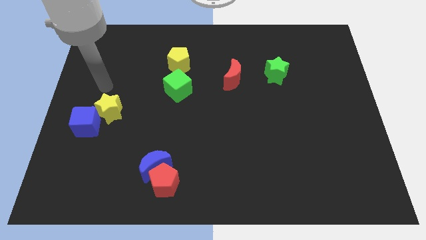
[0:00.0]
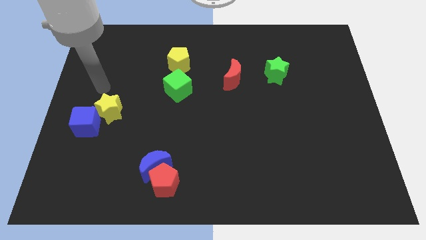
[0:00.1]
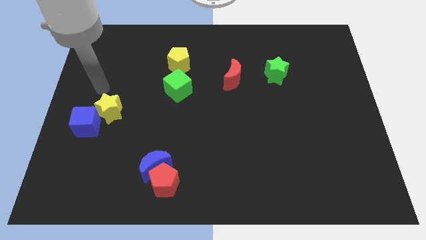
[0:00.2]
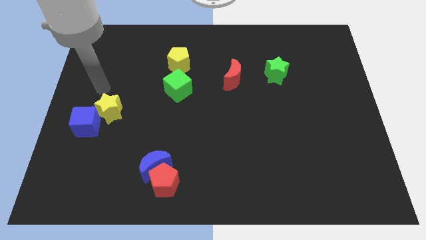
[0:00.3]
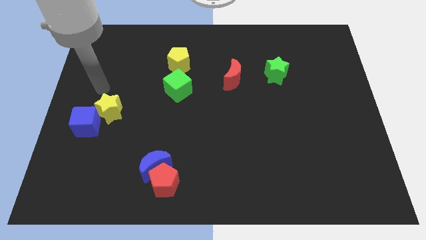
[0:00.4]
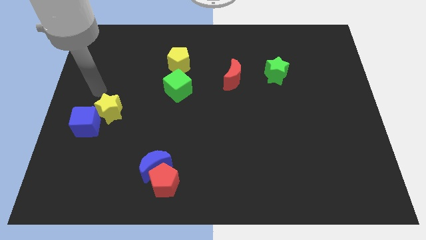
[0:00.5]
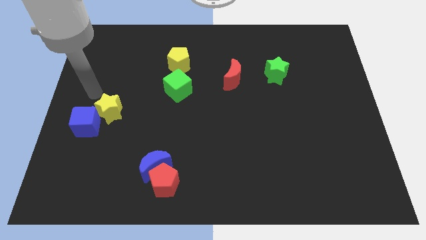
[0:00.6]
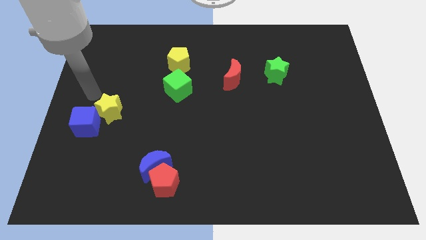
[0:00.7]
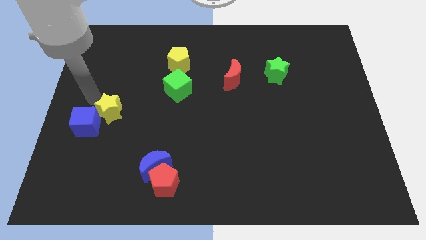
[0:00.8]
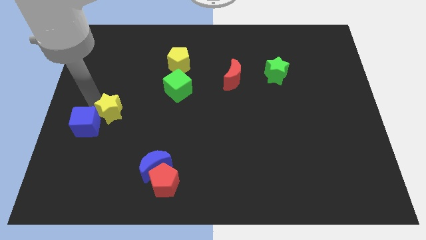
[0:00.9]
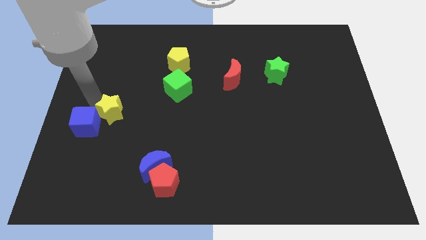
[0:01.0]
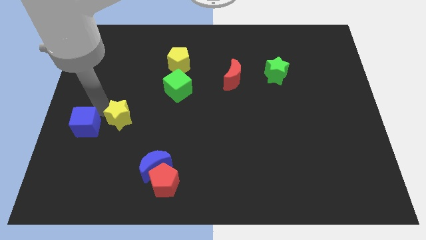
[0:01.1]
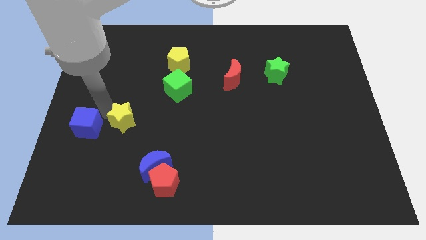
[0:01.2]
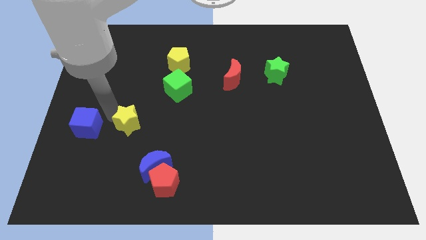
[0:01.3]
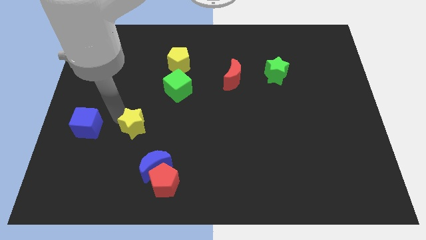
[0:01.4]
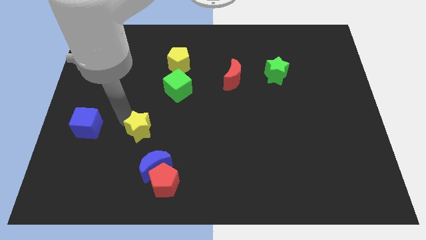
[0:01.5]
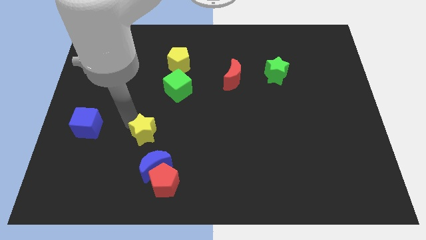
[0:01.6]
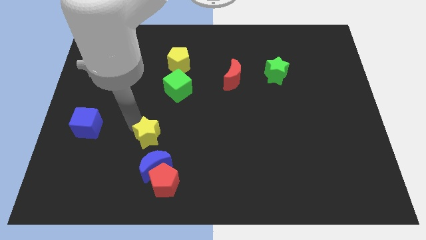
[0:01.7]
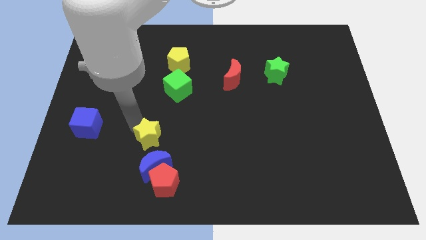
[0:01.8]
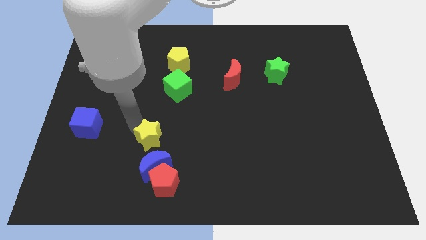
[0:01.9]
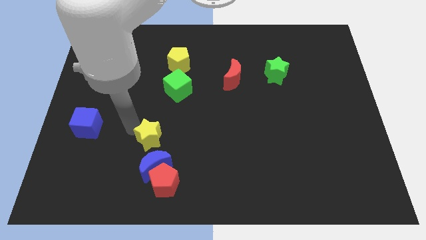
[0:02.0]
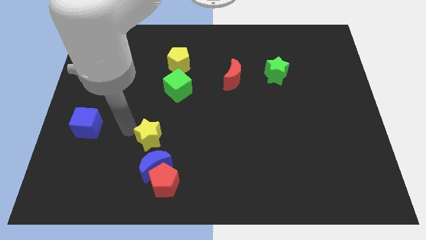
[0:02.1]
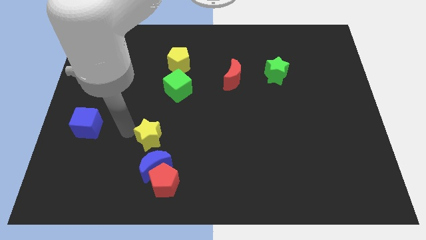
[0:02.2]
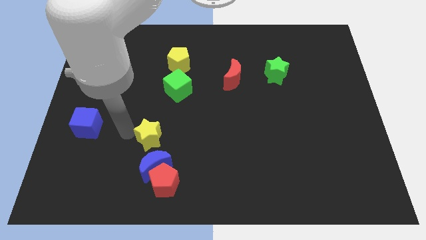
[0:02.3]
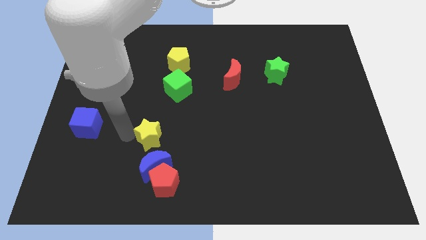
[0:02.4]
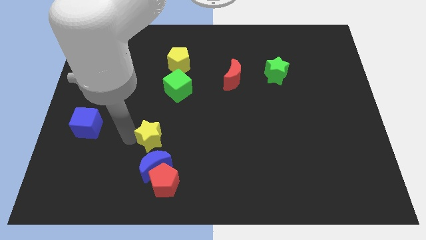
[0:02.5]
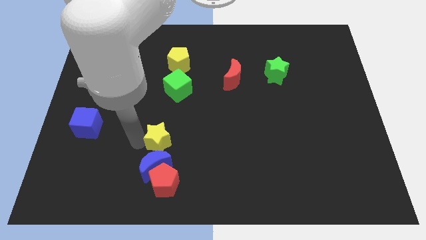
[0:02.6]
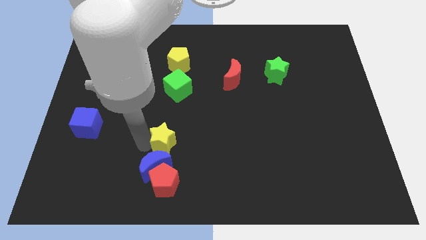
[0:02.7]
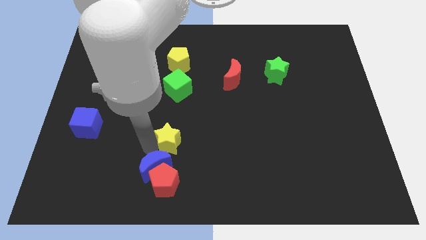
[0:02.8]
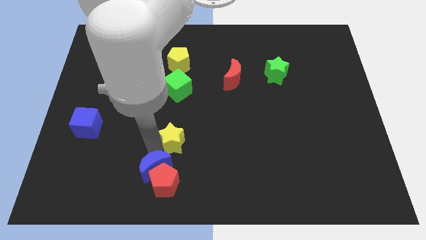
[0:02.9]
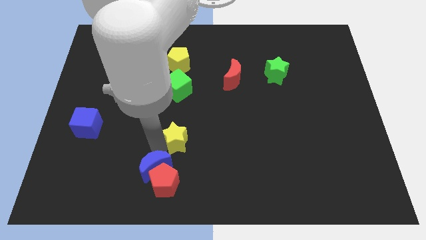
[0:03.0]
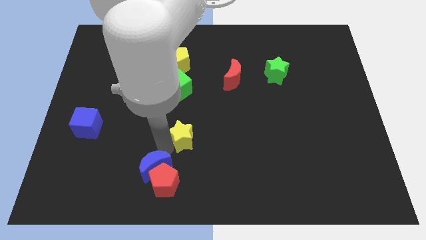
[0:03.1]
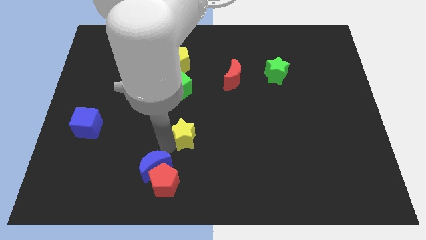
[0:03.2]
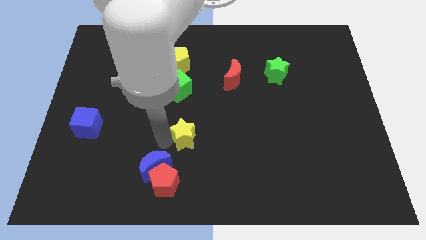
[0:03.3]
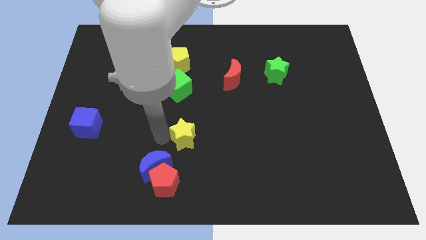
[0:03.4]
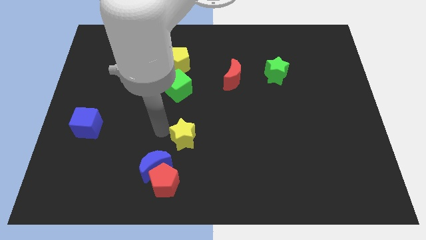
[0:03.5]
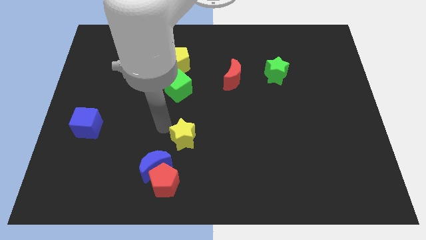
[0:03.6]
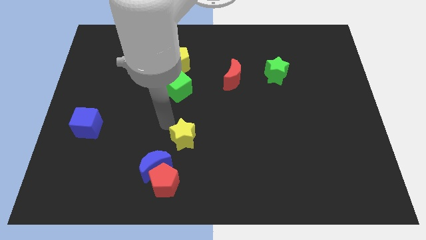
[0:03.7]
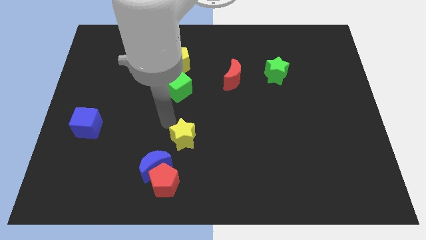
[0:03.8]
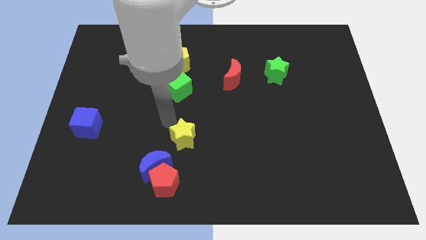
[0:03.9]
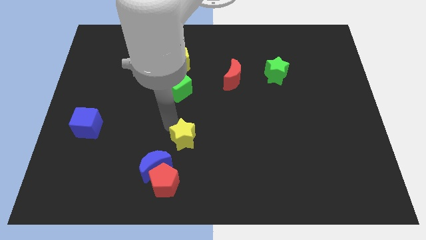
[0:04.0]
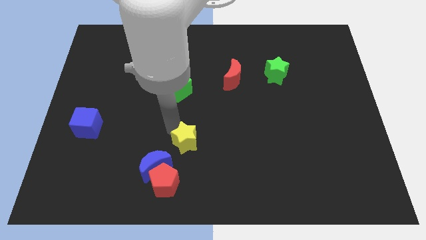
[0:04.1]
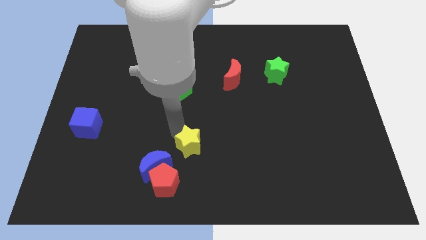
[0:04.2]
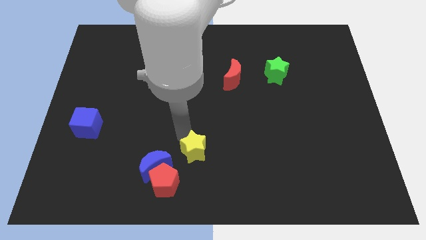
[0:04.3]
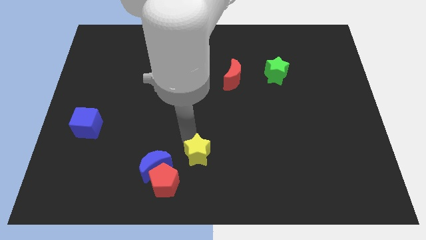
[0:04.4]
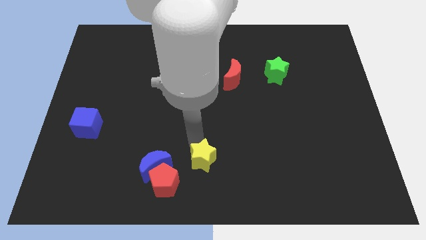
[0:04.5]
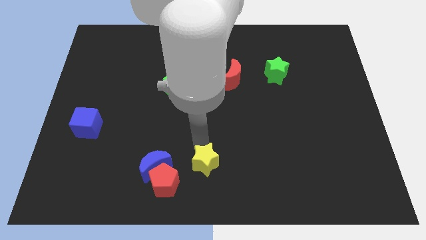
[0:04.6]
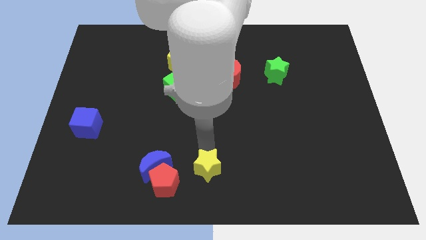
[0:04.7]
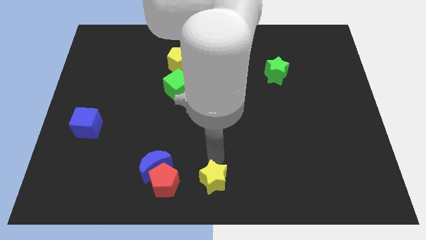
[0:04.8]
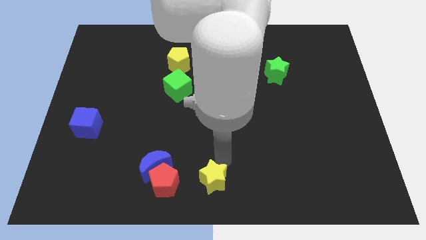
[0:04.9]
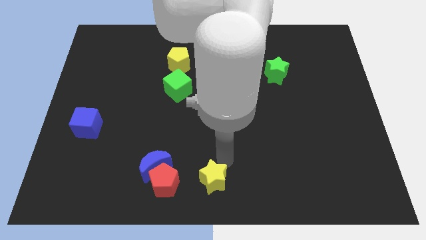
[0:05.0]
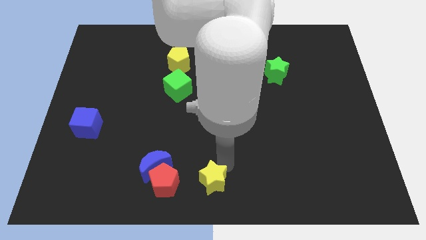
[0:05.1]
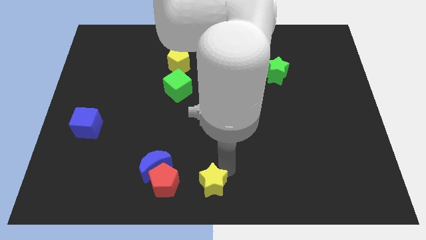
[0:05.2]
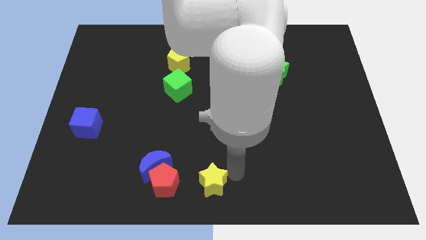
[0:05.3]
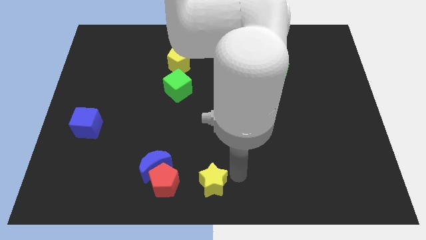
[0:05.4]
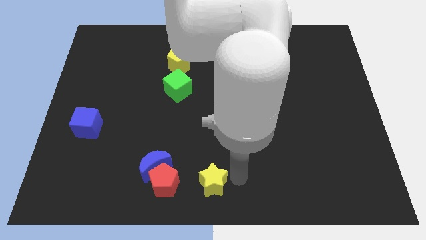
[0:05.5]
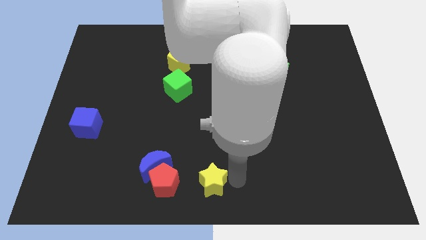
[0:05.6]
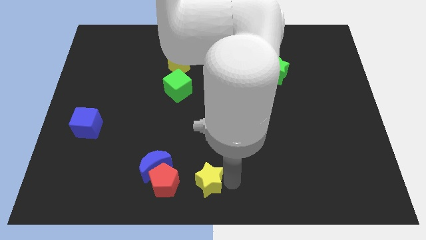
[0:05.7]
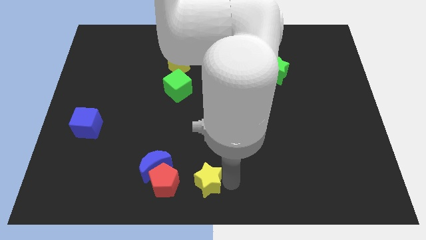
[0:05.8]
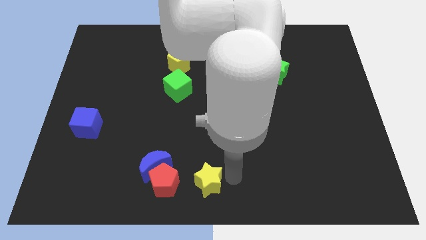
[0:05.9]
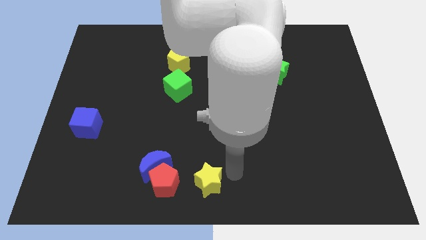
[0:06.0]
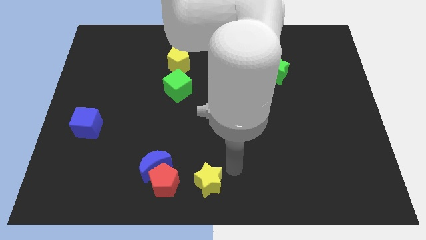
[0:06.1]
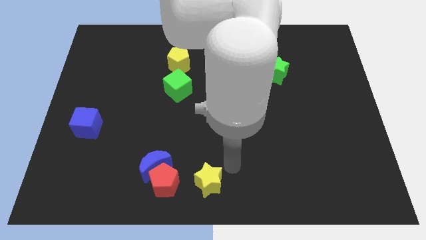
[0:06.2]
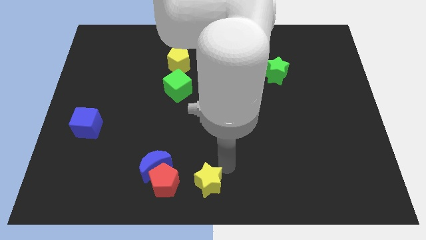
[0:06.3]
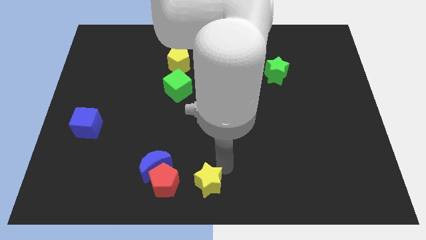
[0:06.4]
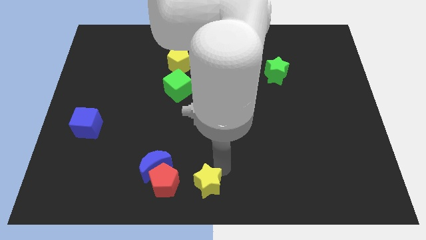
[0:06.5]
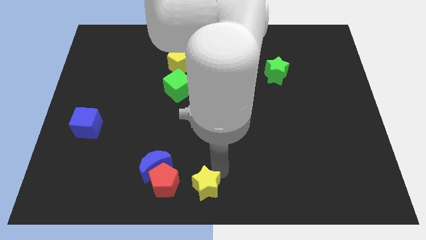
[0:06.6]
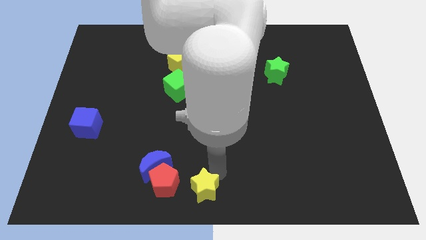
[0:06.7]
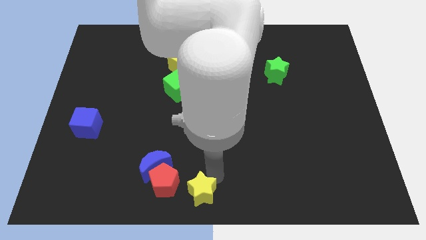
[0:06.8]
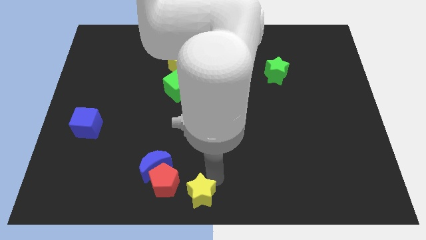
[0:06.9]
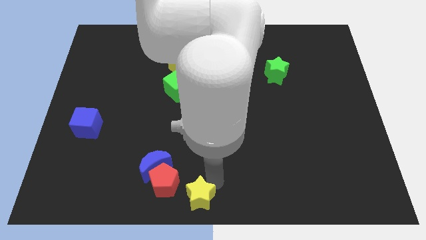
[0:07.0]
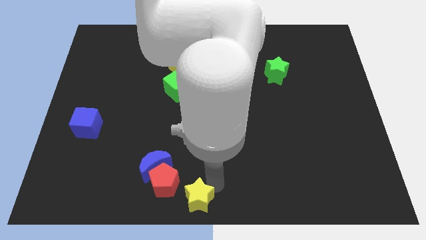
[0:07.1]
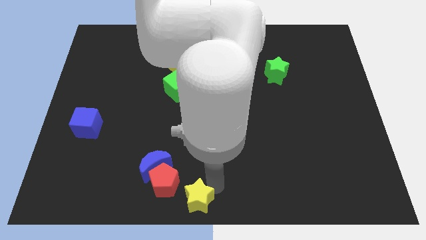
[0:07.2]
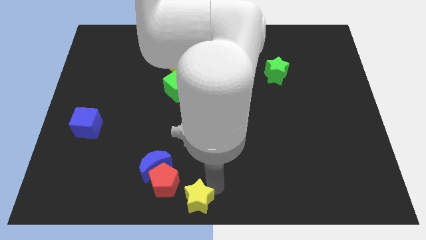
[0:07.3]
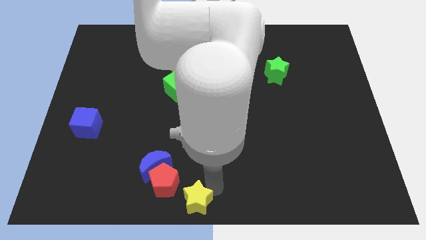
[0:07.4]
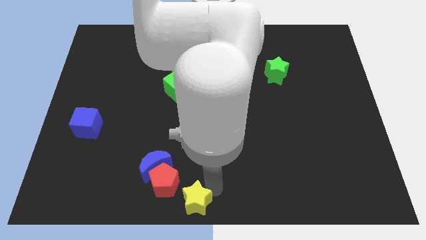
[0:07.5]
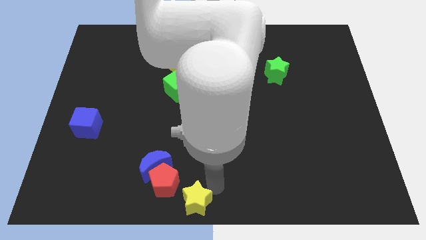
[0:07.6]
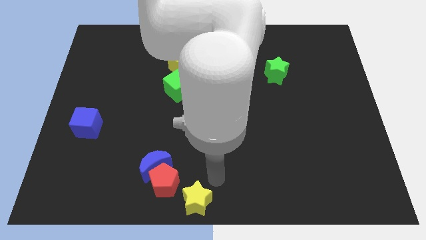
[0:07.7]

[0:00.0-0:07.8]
drag the yellow star to the bottom center

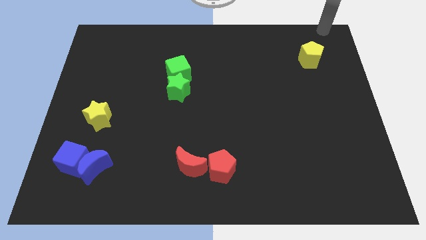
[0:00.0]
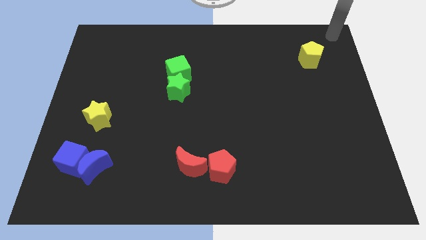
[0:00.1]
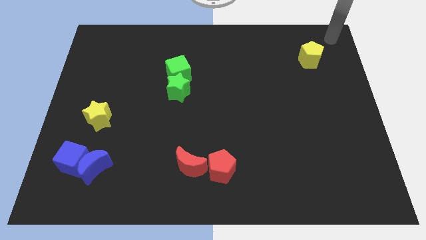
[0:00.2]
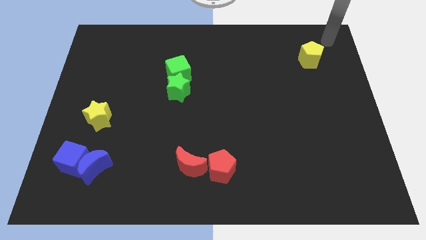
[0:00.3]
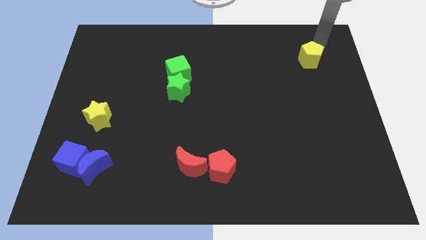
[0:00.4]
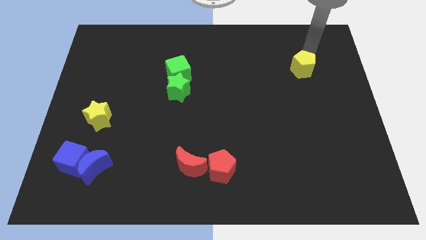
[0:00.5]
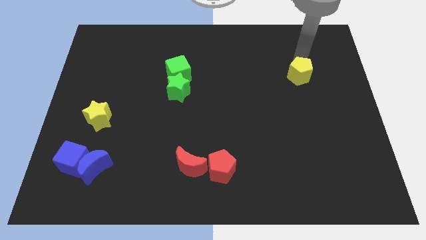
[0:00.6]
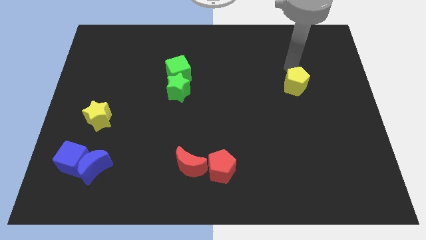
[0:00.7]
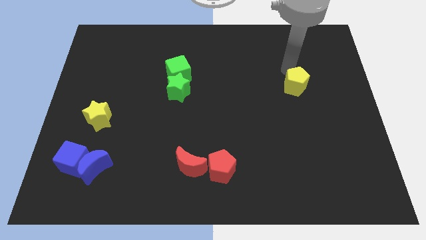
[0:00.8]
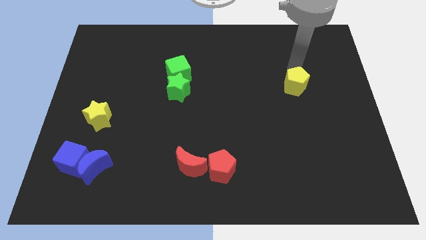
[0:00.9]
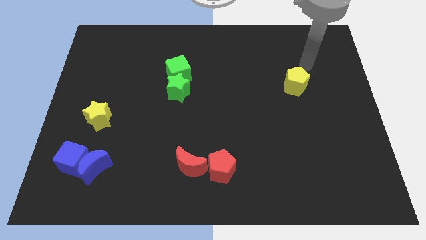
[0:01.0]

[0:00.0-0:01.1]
push the yellow pentagon slightly down

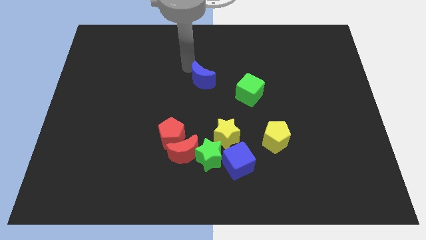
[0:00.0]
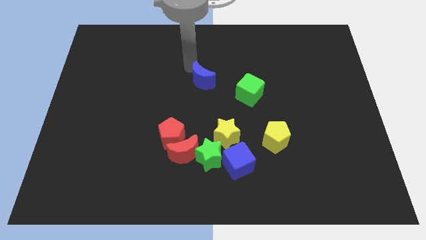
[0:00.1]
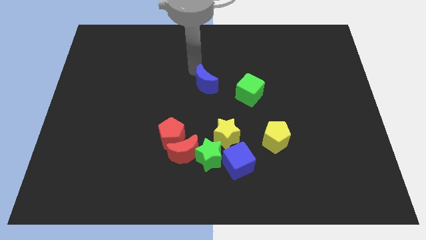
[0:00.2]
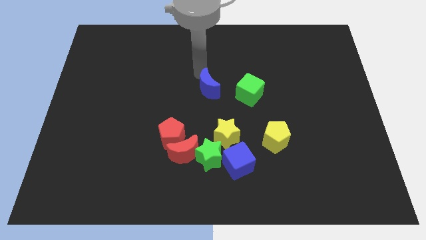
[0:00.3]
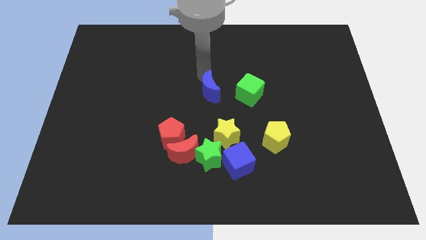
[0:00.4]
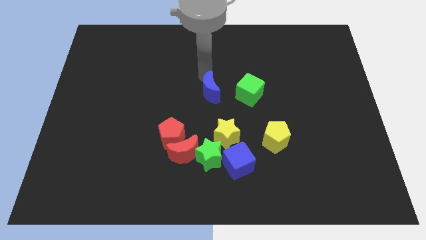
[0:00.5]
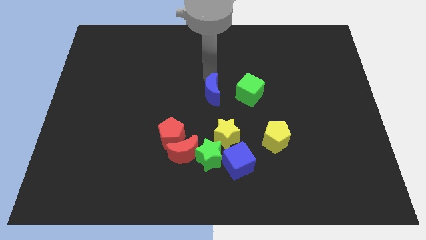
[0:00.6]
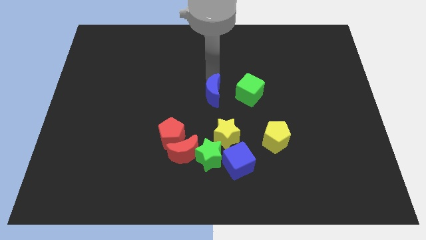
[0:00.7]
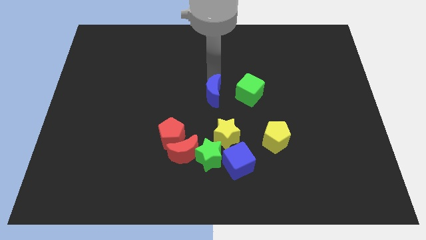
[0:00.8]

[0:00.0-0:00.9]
move the blue crescent towards the center of the board
